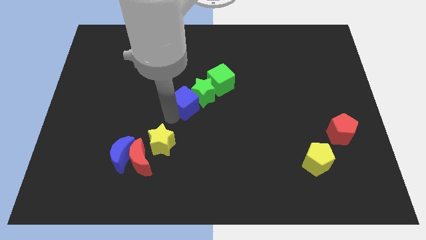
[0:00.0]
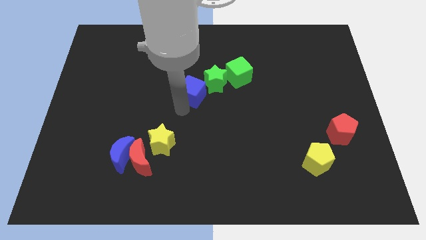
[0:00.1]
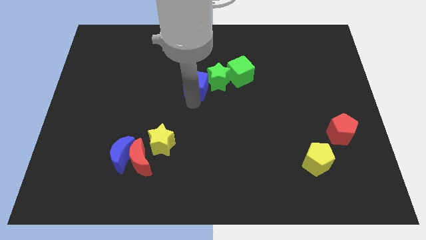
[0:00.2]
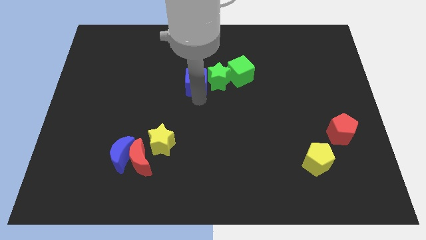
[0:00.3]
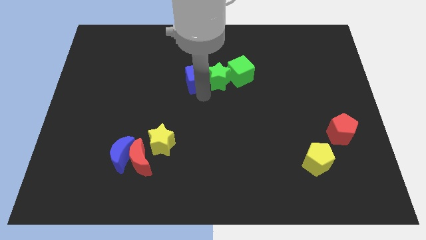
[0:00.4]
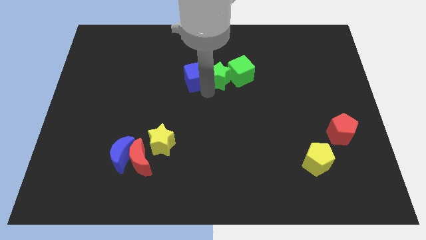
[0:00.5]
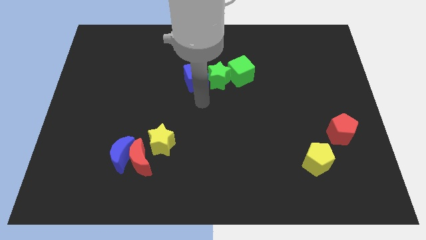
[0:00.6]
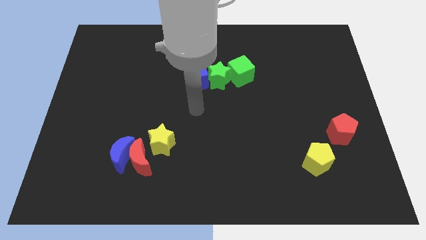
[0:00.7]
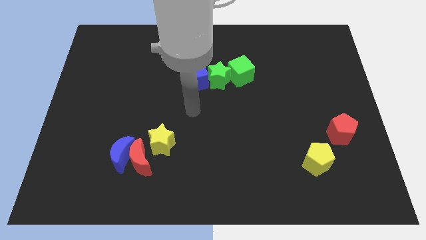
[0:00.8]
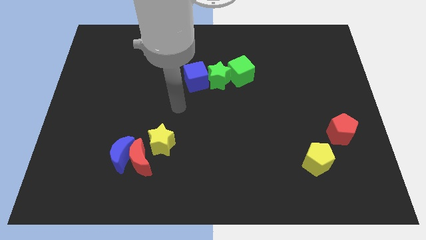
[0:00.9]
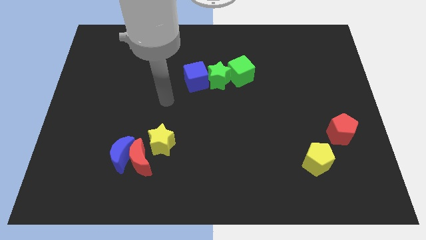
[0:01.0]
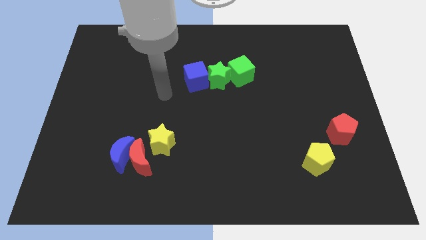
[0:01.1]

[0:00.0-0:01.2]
push the green star and green cube with the blue cube slightly up

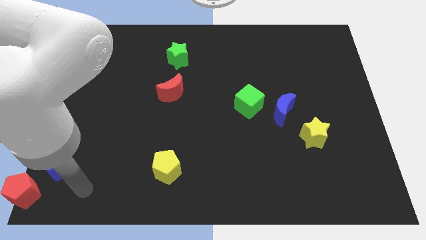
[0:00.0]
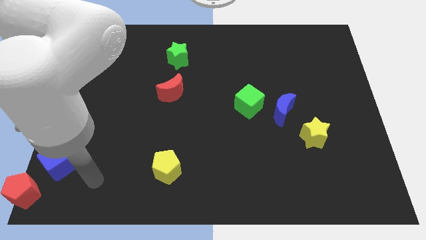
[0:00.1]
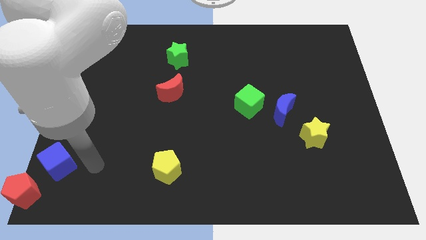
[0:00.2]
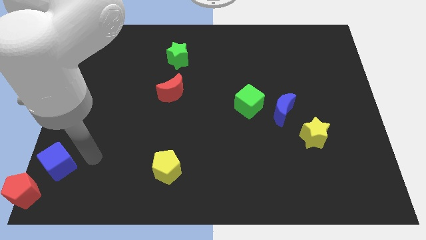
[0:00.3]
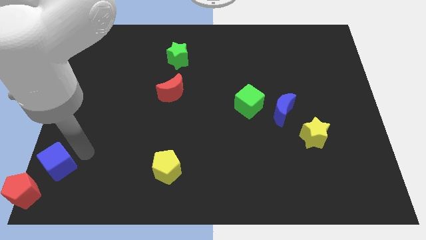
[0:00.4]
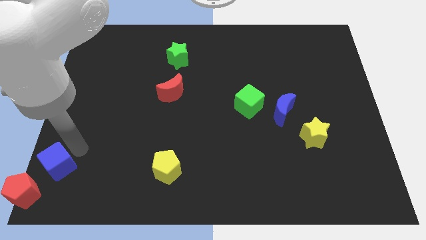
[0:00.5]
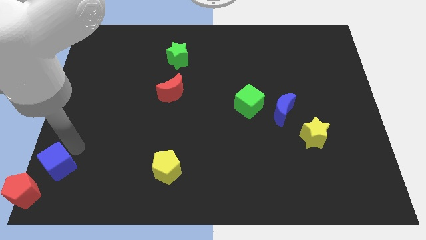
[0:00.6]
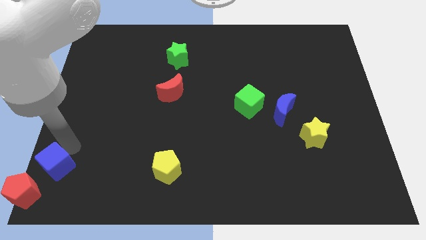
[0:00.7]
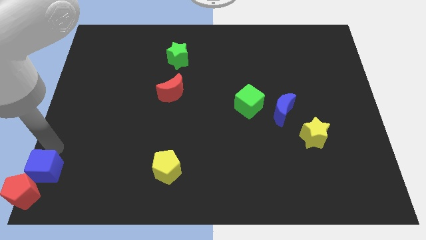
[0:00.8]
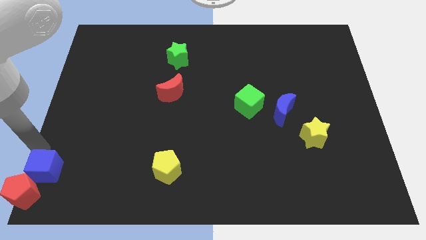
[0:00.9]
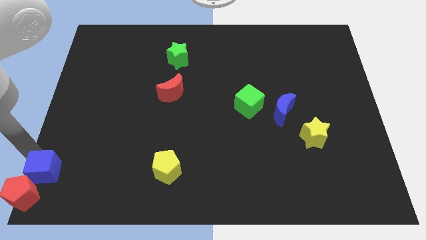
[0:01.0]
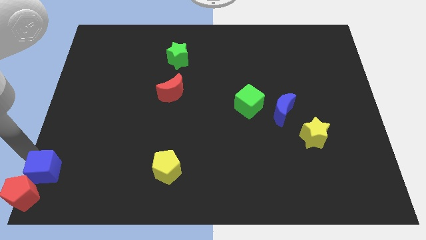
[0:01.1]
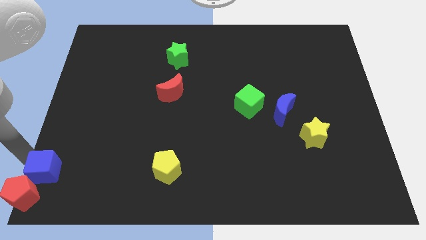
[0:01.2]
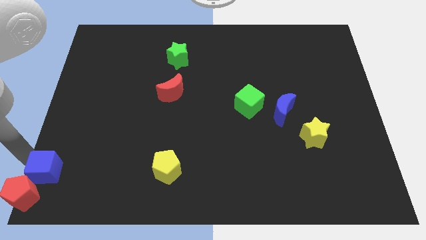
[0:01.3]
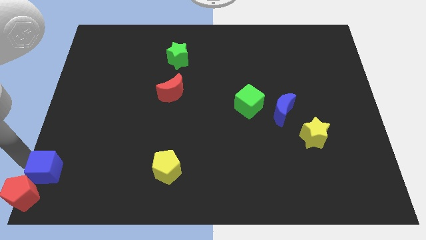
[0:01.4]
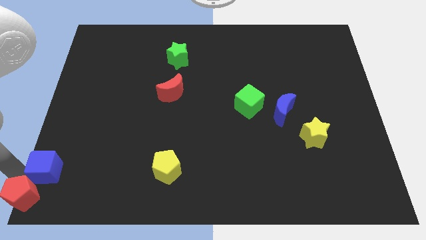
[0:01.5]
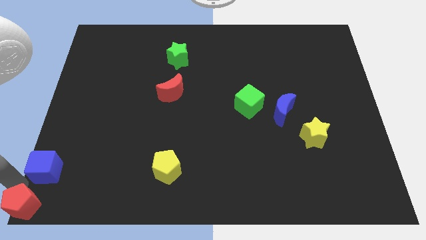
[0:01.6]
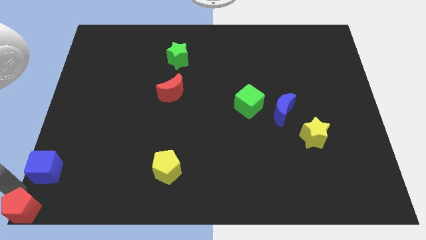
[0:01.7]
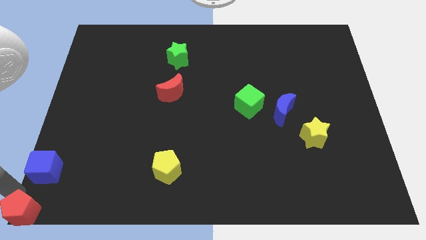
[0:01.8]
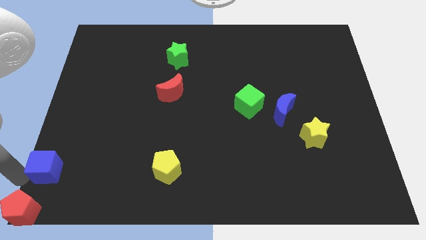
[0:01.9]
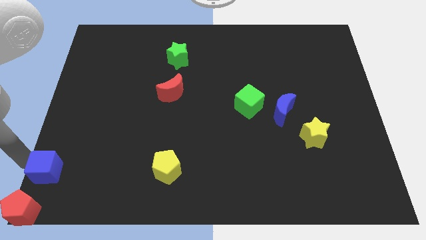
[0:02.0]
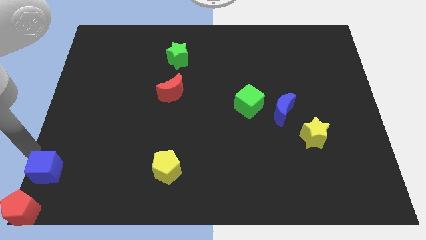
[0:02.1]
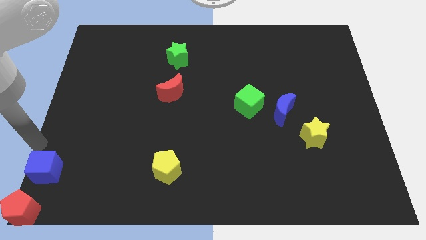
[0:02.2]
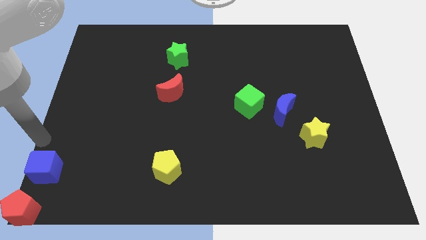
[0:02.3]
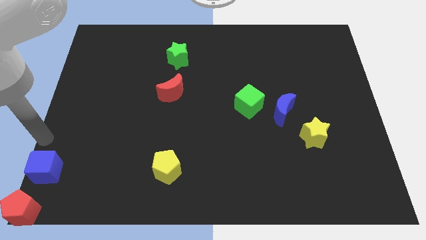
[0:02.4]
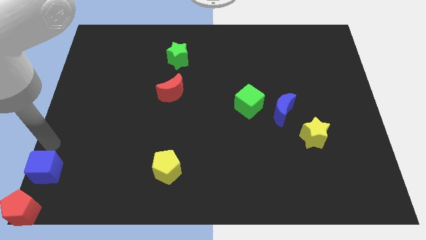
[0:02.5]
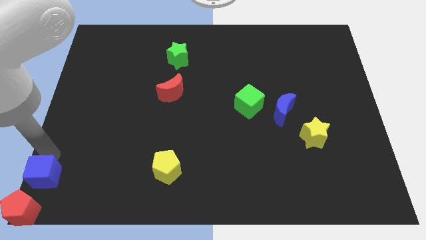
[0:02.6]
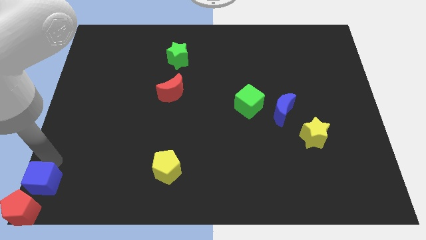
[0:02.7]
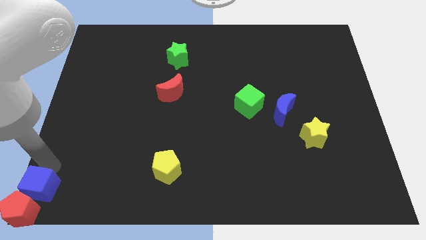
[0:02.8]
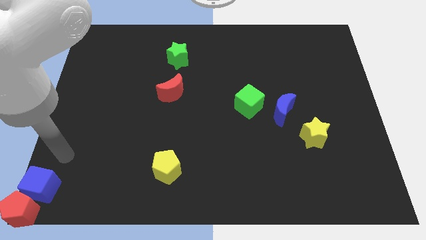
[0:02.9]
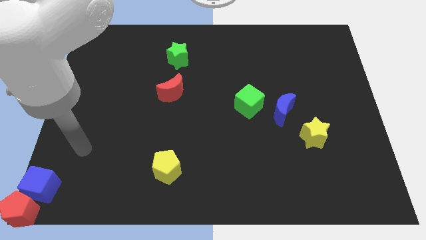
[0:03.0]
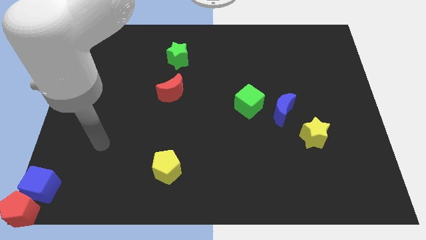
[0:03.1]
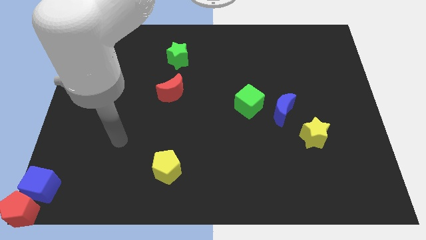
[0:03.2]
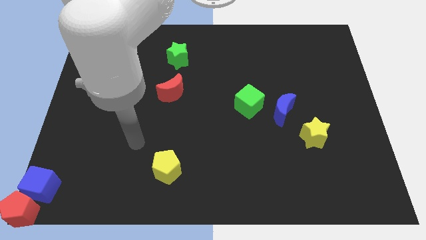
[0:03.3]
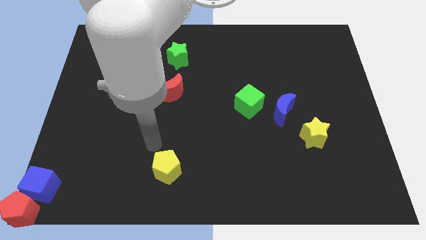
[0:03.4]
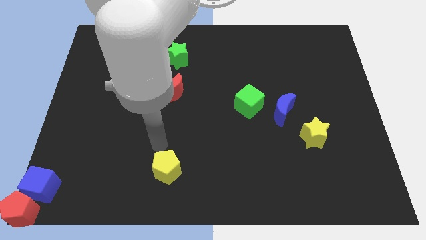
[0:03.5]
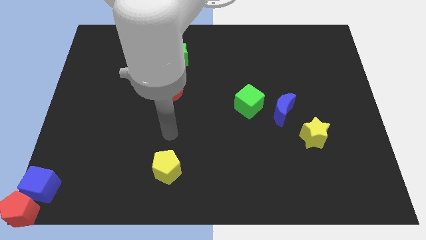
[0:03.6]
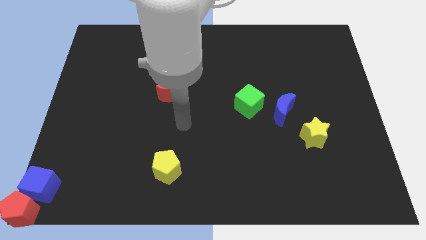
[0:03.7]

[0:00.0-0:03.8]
push the blue cube into the red pentagon

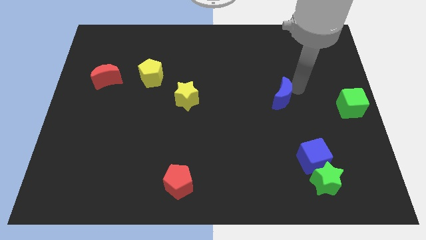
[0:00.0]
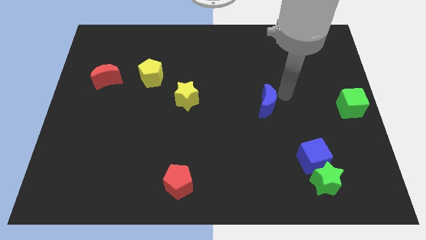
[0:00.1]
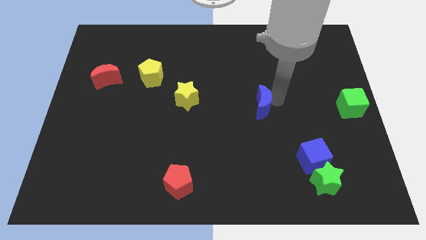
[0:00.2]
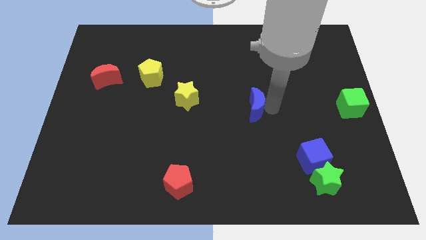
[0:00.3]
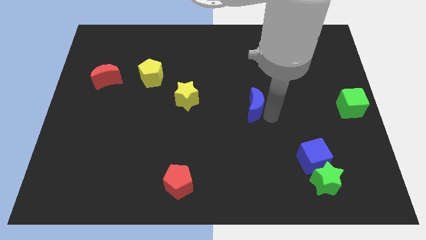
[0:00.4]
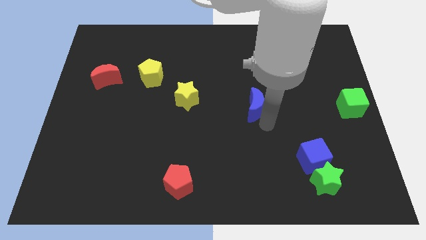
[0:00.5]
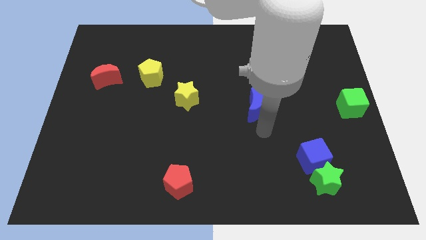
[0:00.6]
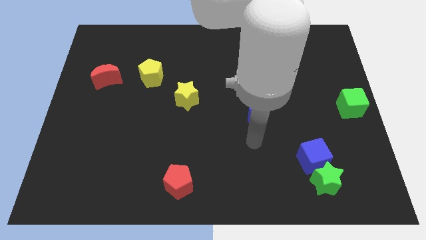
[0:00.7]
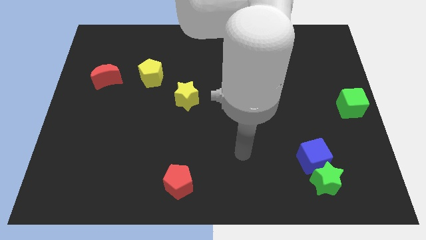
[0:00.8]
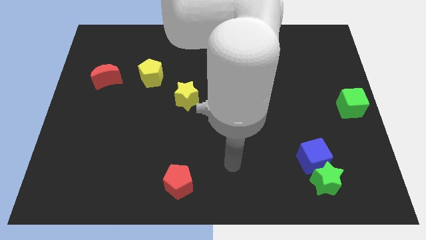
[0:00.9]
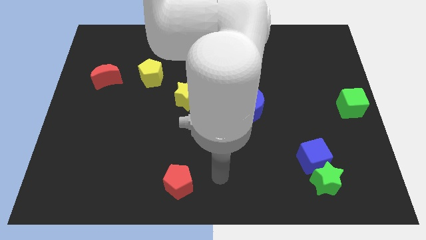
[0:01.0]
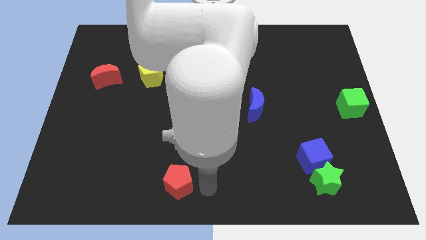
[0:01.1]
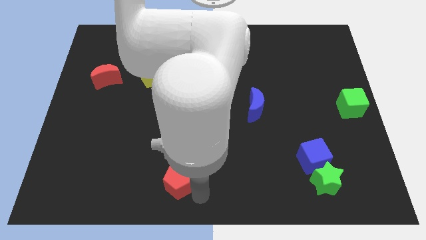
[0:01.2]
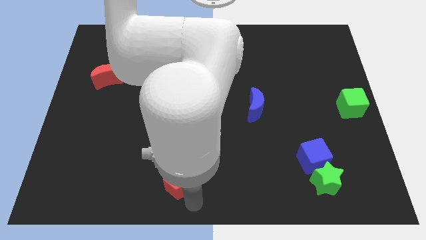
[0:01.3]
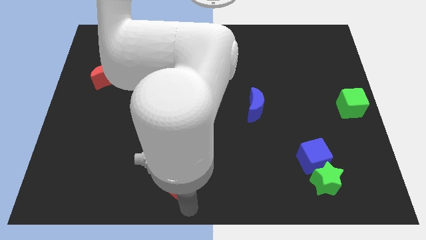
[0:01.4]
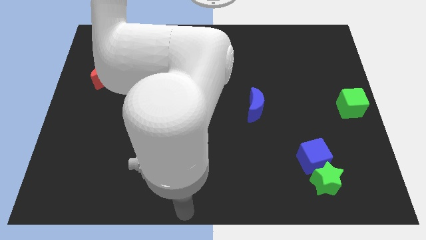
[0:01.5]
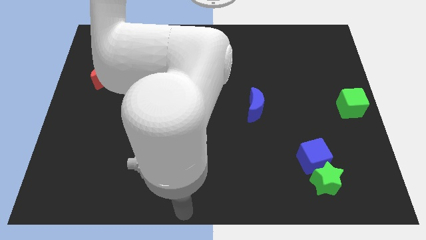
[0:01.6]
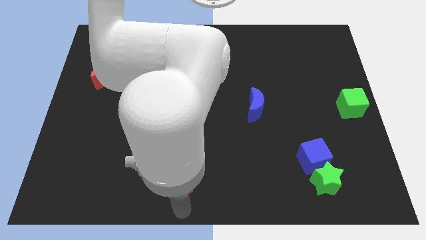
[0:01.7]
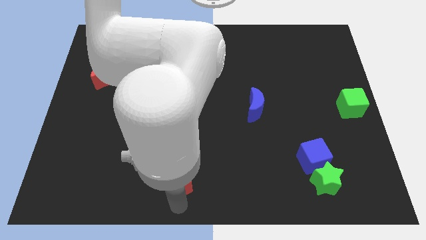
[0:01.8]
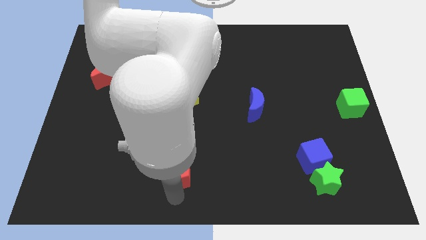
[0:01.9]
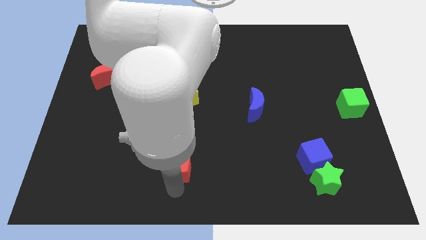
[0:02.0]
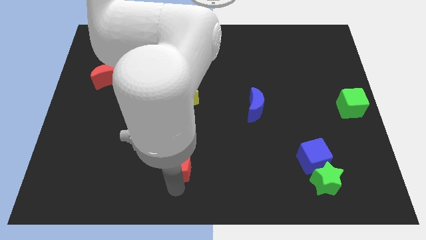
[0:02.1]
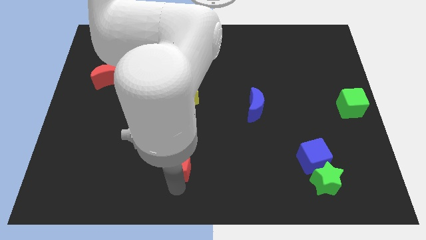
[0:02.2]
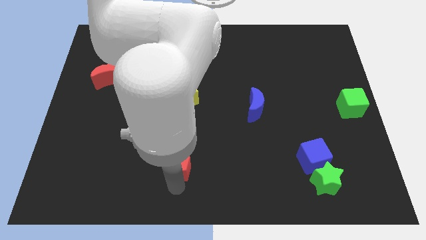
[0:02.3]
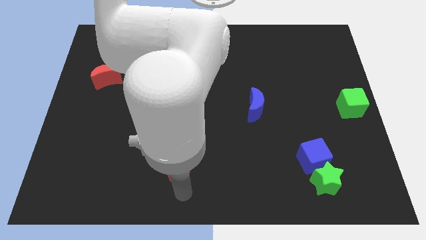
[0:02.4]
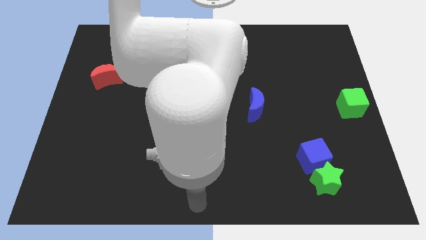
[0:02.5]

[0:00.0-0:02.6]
touch the bottom of red pentagon

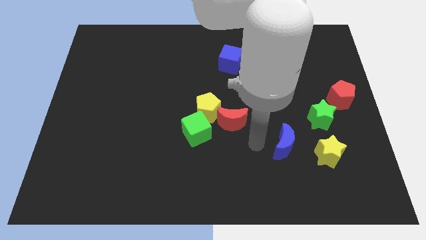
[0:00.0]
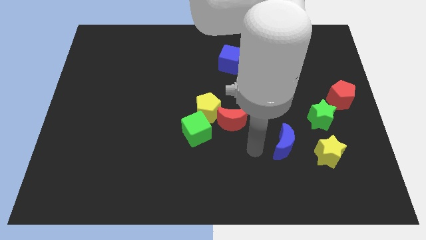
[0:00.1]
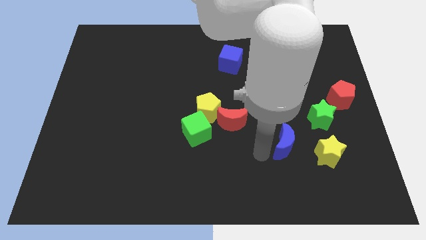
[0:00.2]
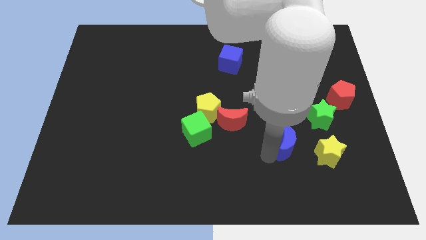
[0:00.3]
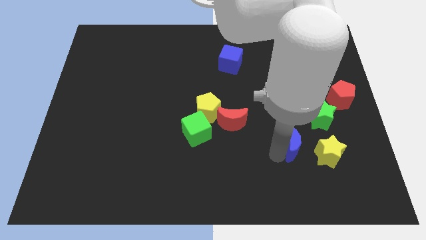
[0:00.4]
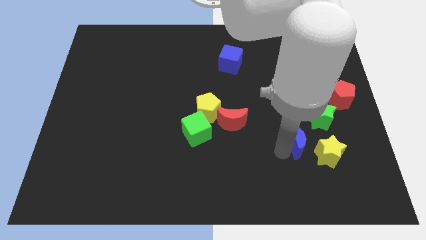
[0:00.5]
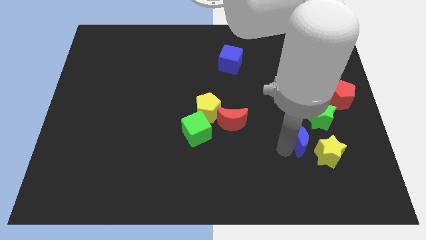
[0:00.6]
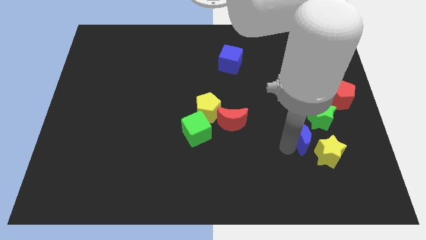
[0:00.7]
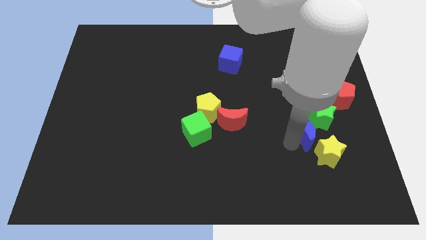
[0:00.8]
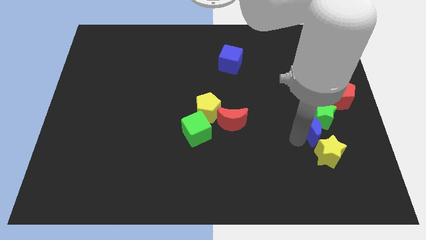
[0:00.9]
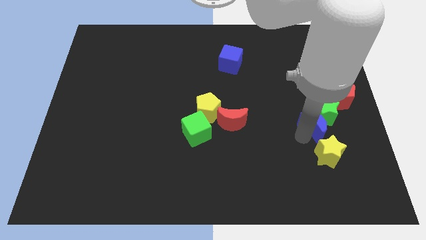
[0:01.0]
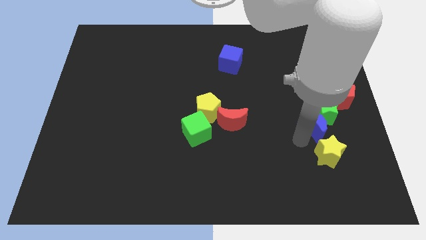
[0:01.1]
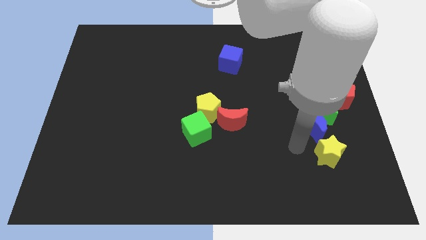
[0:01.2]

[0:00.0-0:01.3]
push the blue crescent into the green star

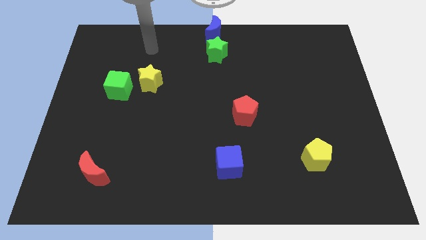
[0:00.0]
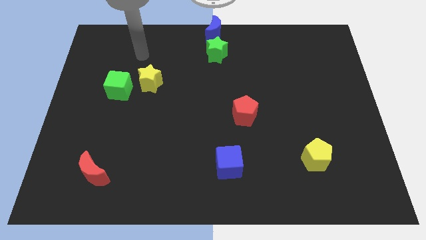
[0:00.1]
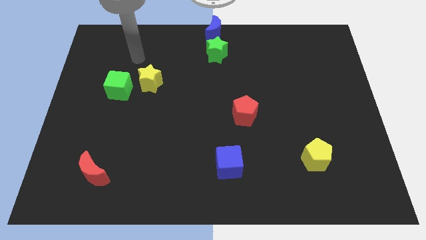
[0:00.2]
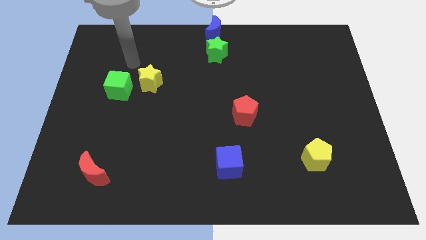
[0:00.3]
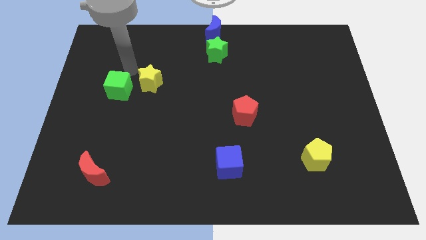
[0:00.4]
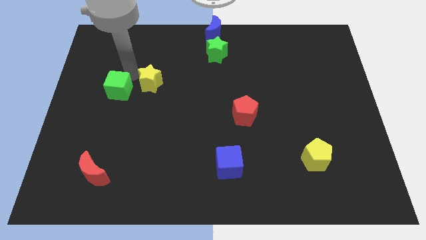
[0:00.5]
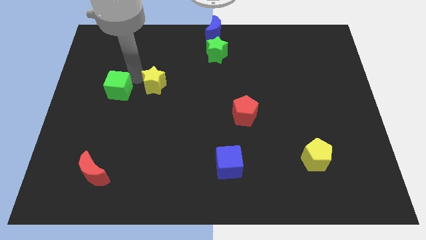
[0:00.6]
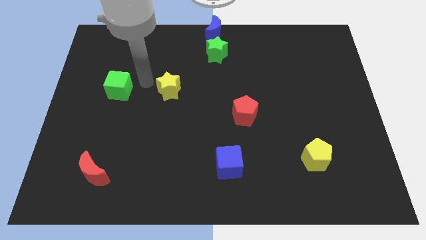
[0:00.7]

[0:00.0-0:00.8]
place the yellow star right to the green cube
